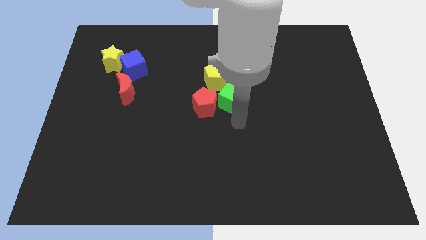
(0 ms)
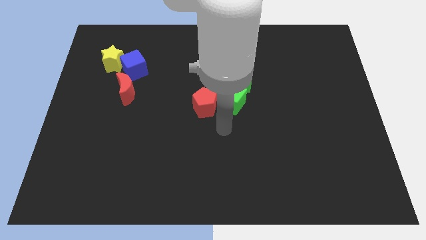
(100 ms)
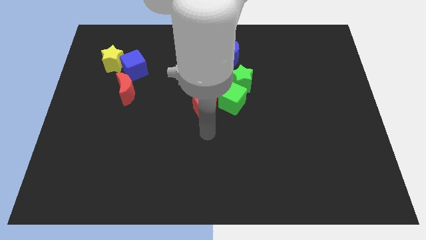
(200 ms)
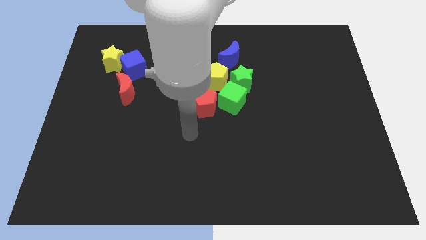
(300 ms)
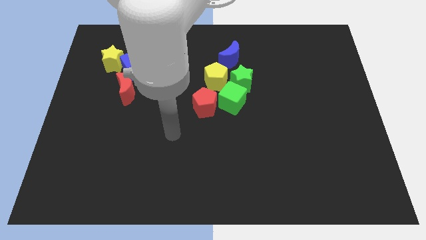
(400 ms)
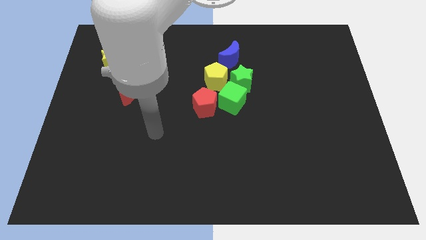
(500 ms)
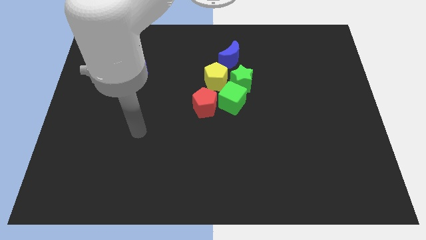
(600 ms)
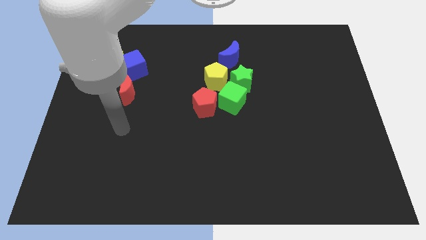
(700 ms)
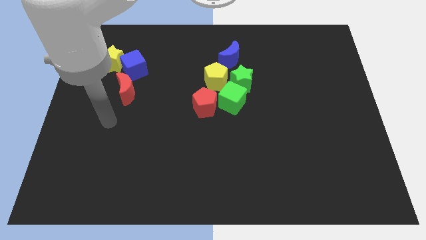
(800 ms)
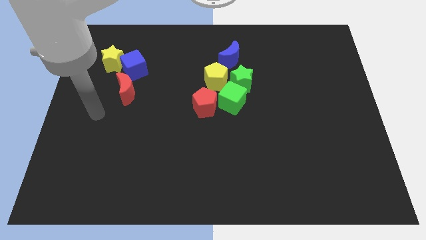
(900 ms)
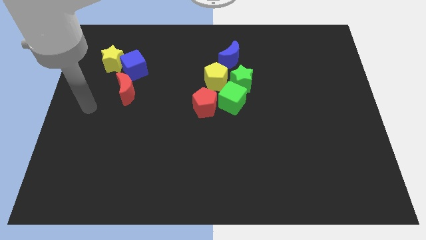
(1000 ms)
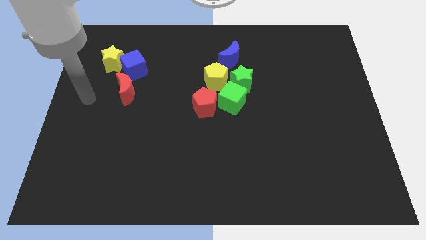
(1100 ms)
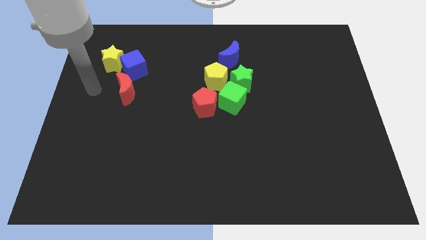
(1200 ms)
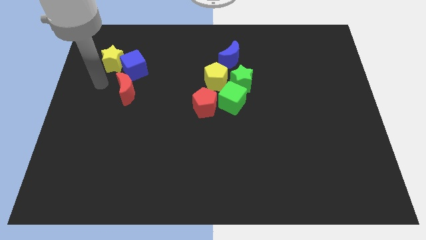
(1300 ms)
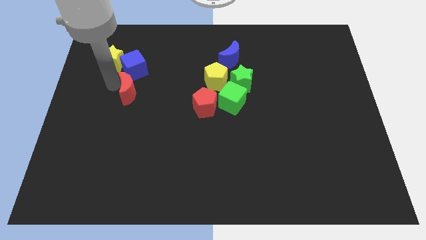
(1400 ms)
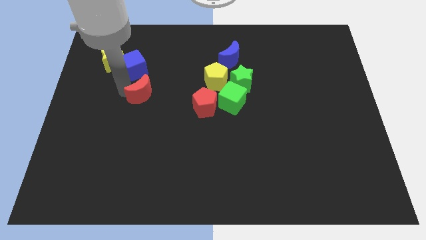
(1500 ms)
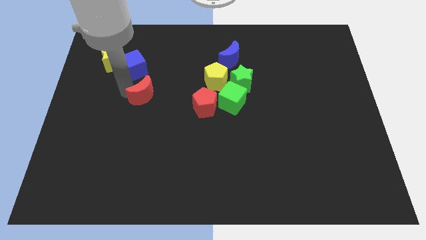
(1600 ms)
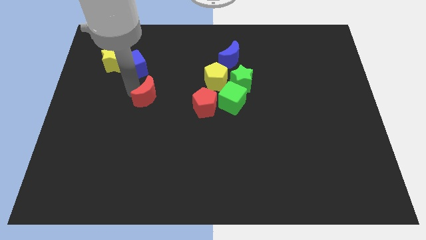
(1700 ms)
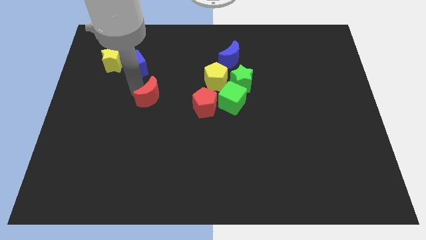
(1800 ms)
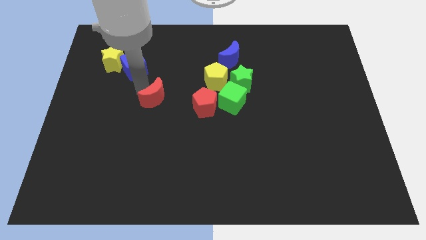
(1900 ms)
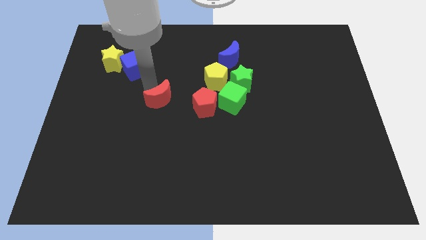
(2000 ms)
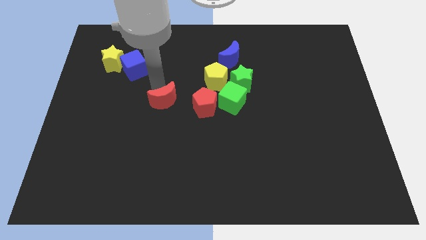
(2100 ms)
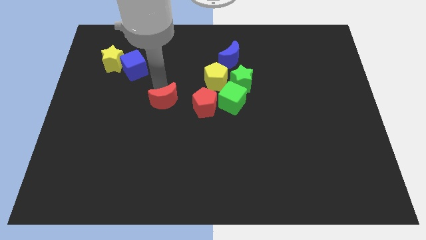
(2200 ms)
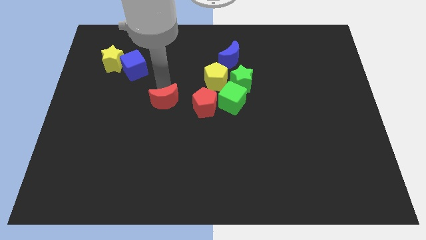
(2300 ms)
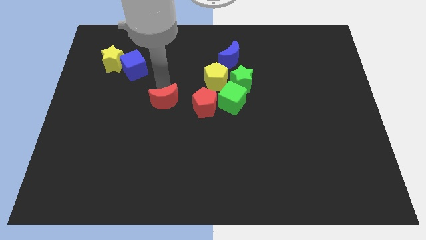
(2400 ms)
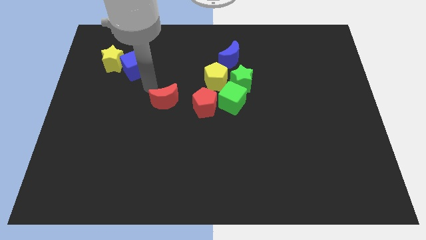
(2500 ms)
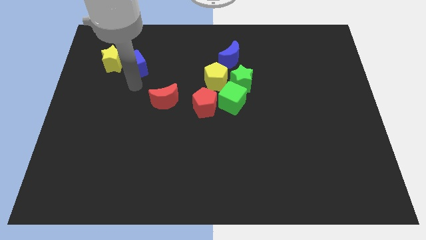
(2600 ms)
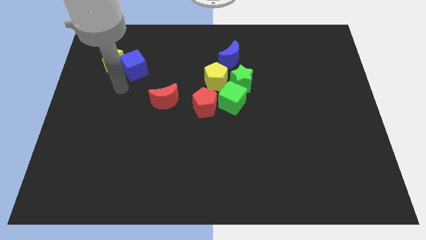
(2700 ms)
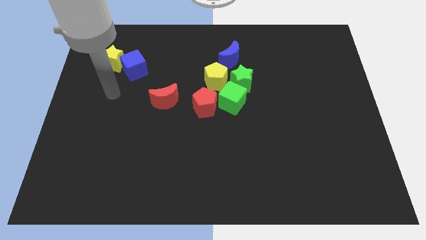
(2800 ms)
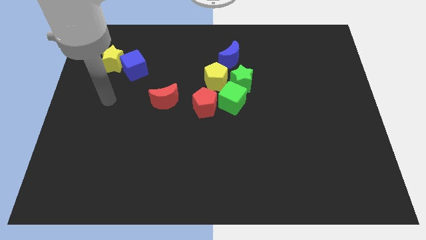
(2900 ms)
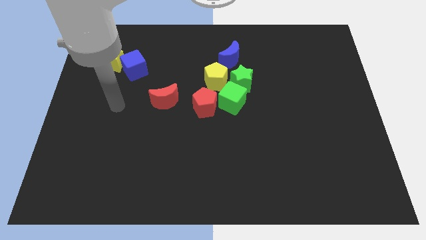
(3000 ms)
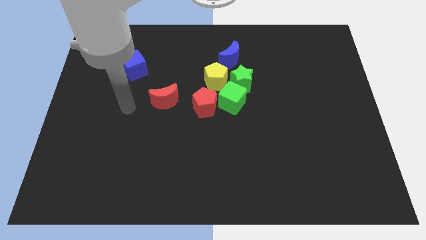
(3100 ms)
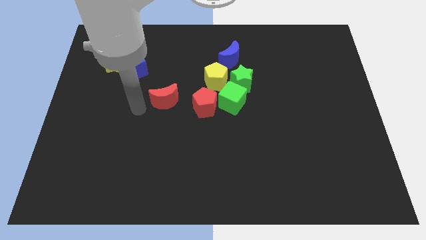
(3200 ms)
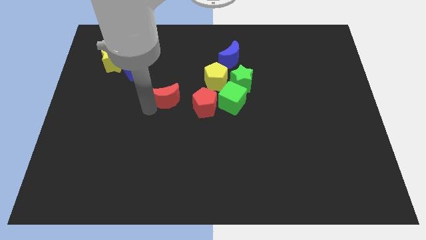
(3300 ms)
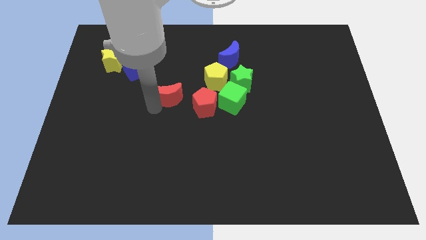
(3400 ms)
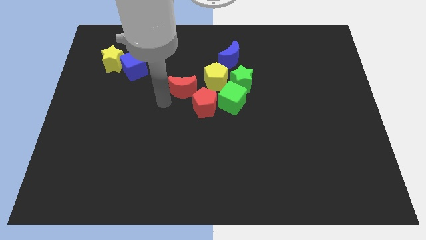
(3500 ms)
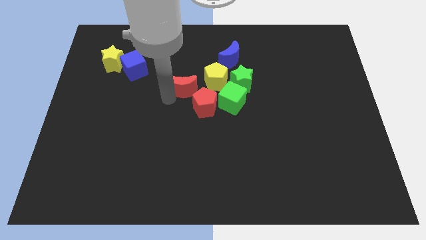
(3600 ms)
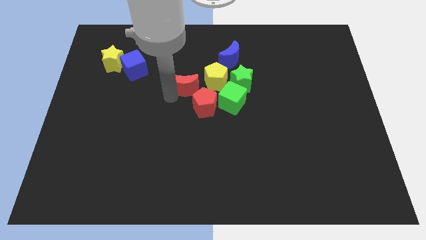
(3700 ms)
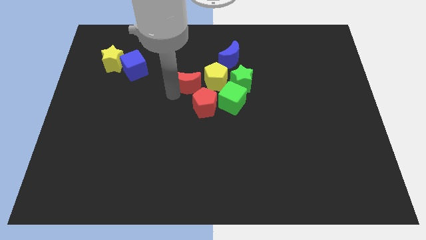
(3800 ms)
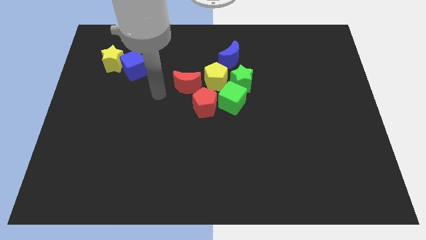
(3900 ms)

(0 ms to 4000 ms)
move the red moon near to the left side of the yellow pentagon

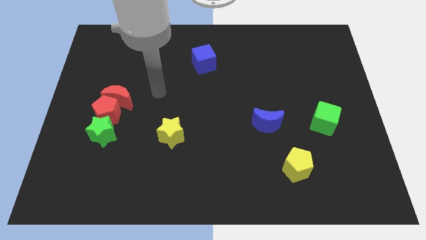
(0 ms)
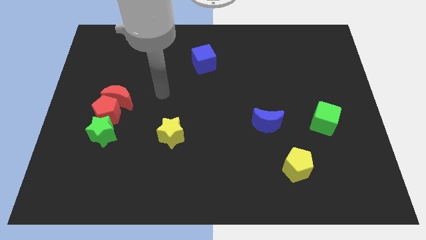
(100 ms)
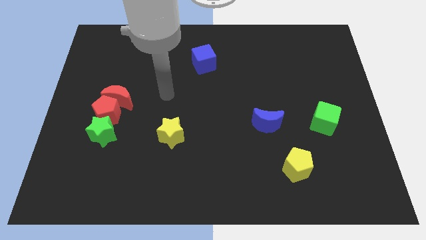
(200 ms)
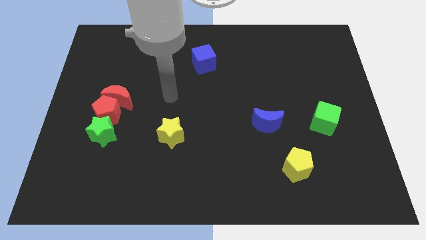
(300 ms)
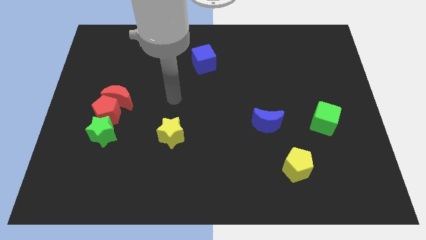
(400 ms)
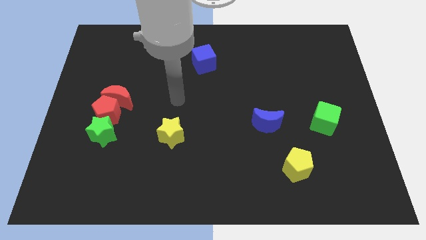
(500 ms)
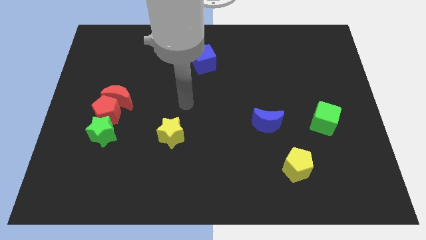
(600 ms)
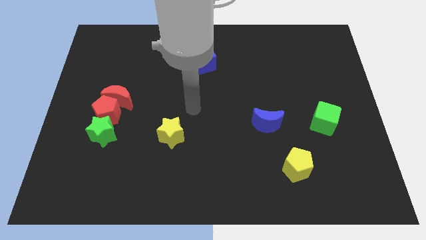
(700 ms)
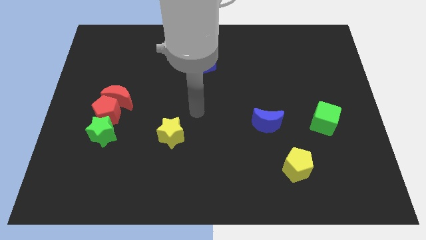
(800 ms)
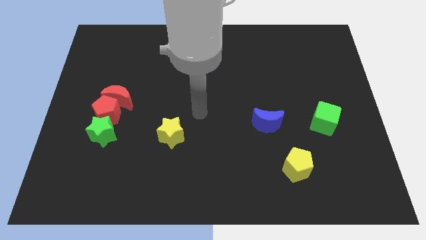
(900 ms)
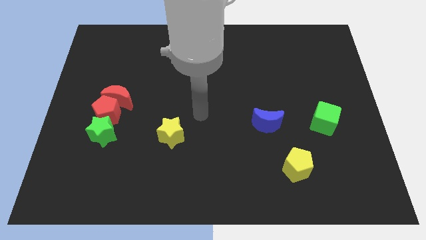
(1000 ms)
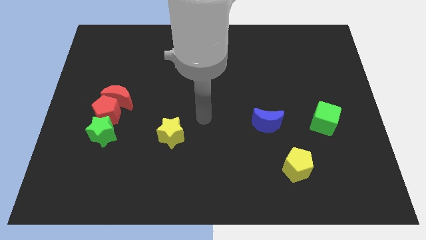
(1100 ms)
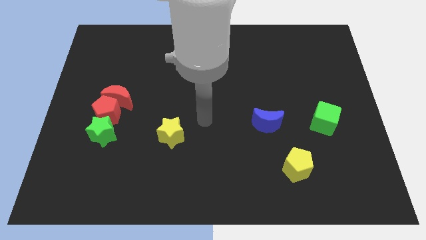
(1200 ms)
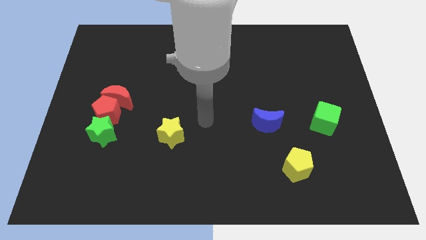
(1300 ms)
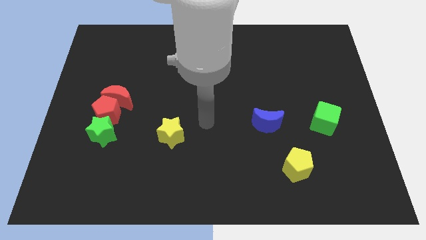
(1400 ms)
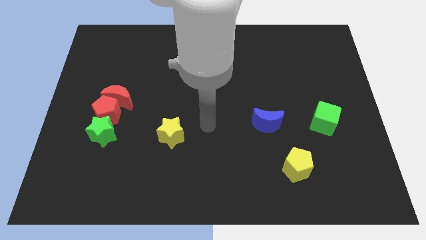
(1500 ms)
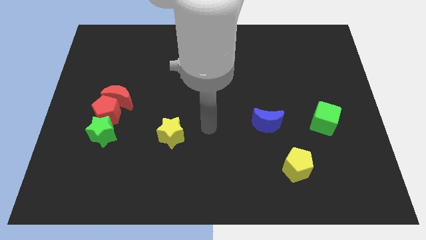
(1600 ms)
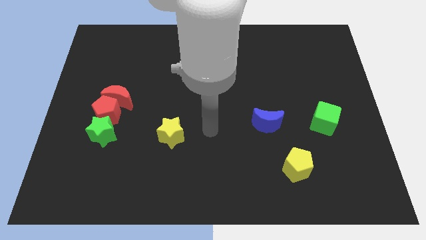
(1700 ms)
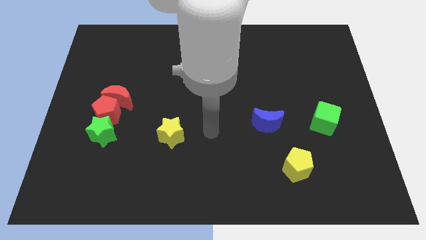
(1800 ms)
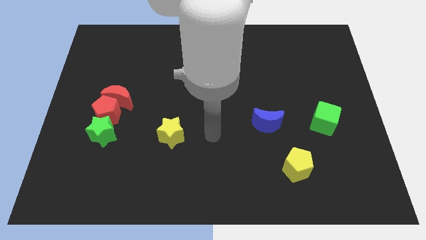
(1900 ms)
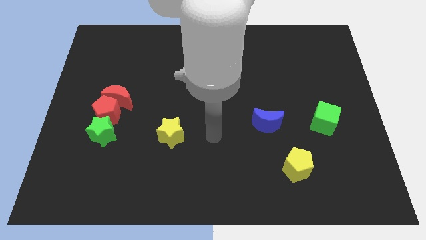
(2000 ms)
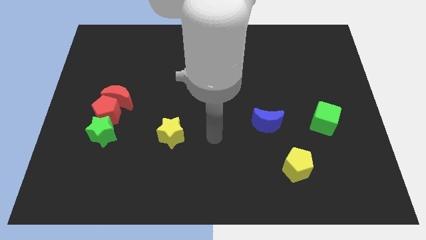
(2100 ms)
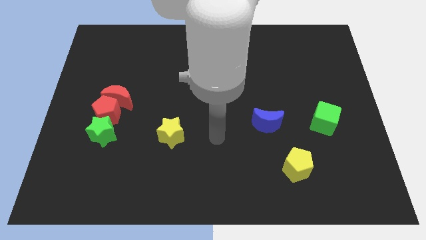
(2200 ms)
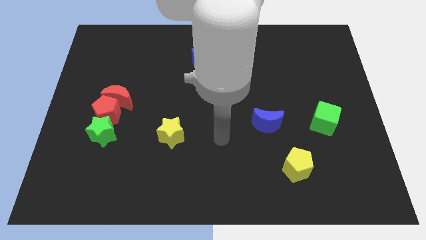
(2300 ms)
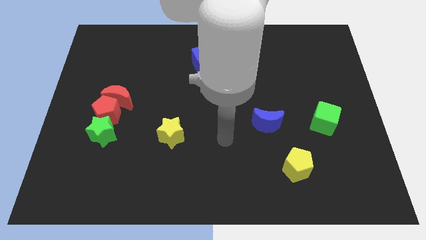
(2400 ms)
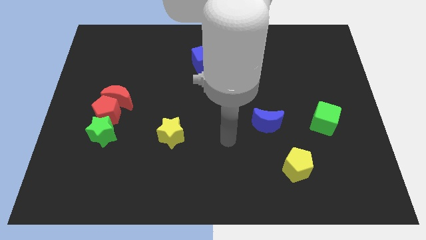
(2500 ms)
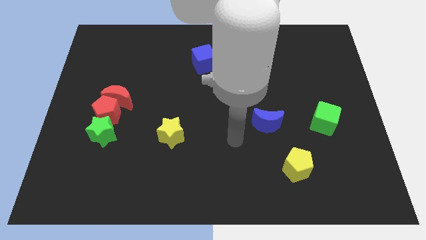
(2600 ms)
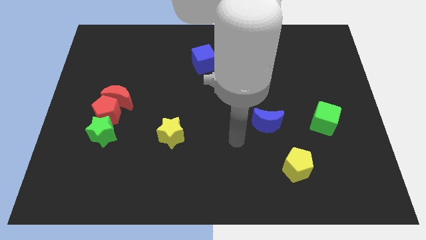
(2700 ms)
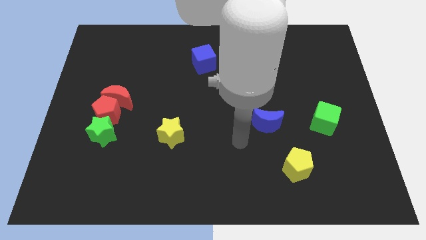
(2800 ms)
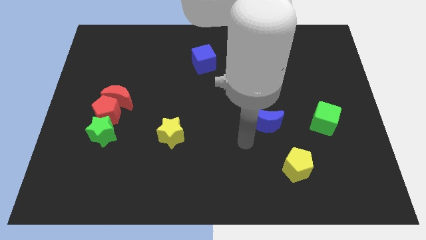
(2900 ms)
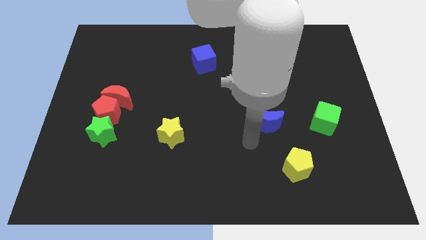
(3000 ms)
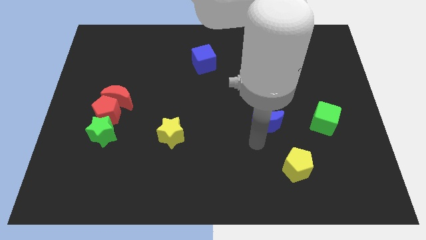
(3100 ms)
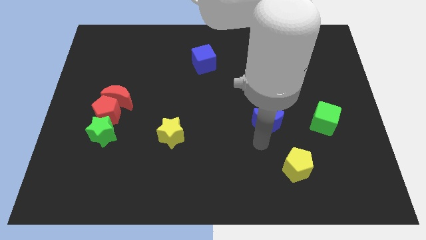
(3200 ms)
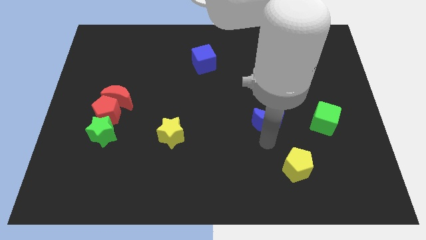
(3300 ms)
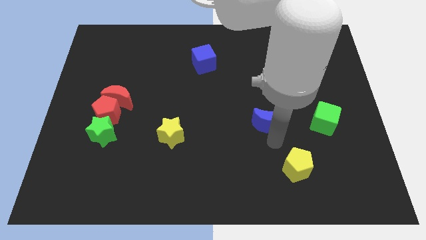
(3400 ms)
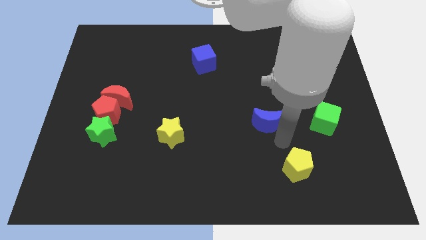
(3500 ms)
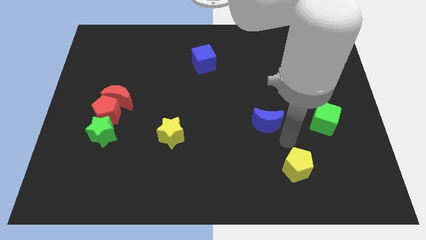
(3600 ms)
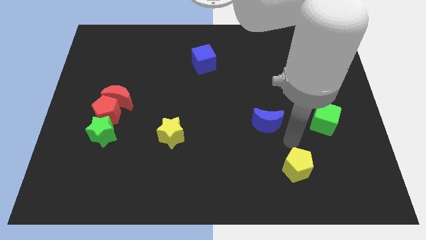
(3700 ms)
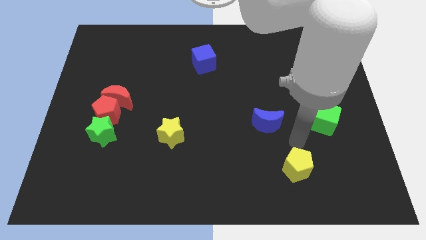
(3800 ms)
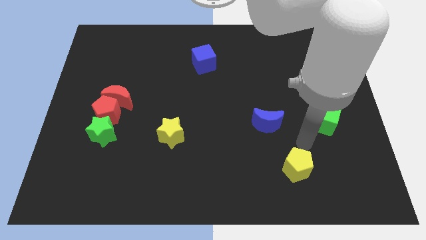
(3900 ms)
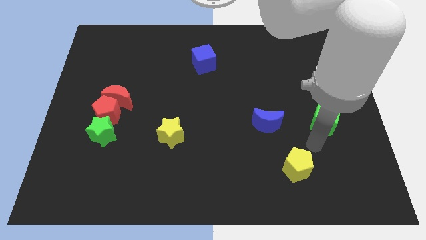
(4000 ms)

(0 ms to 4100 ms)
place your arm in between green cube and yellow pentagon

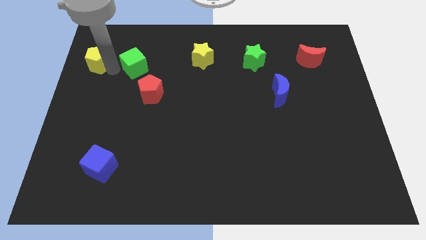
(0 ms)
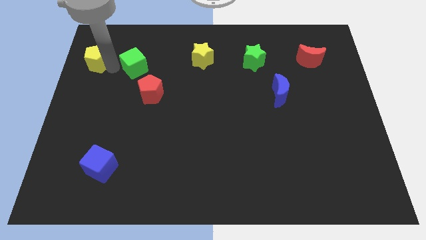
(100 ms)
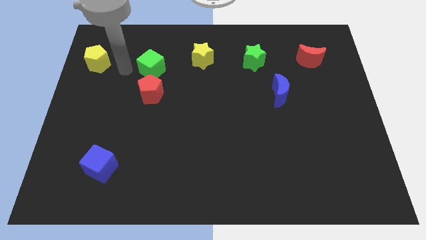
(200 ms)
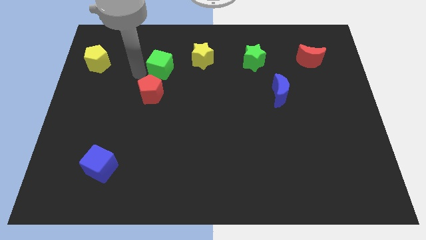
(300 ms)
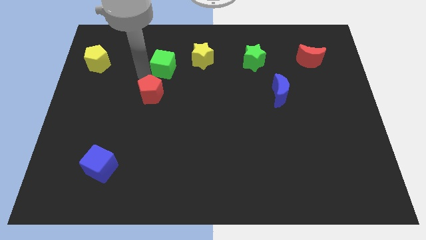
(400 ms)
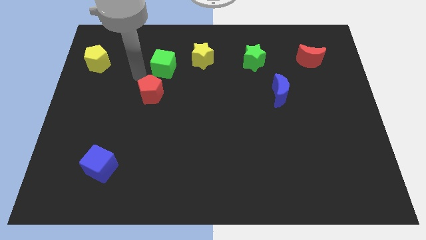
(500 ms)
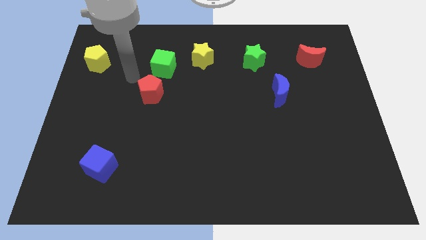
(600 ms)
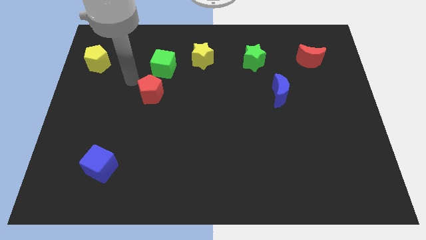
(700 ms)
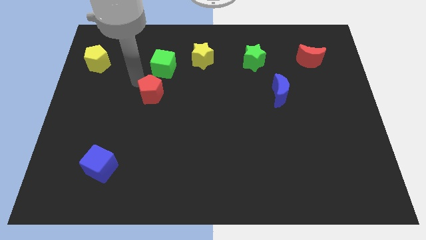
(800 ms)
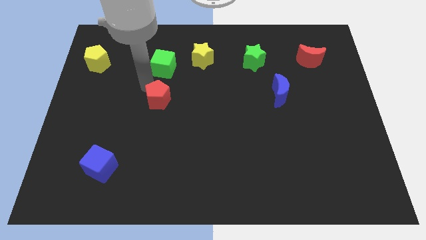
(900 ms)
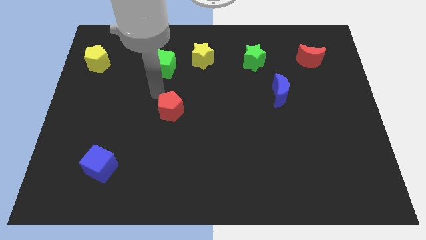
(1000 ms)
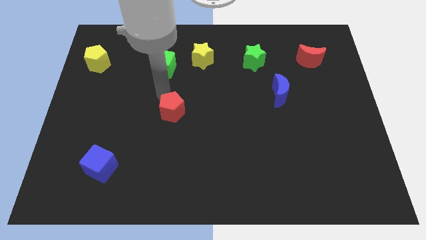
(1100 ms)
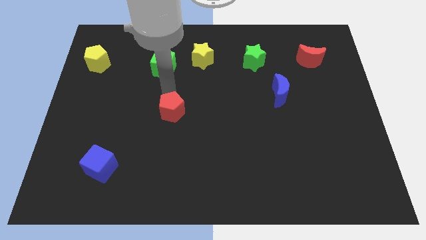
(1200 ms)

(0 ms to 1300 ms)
put the red pentagon vertically below the green cube
